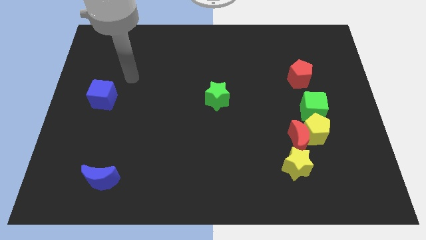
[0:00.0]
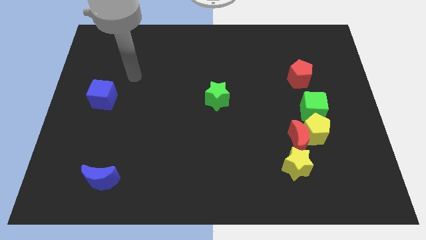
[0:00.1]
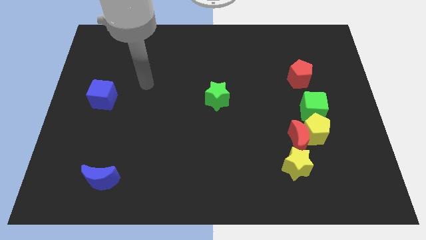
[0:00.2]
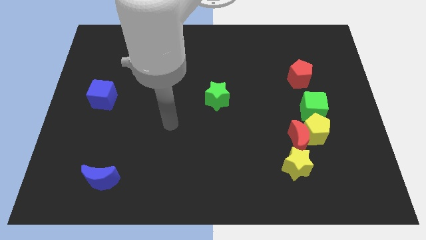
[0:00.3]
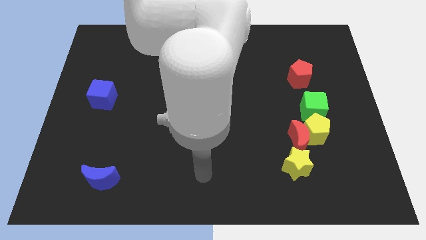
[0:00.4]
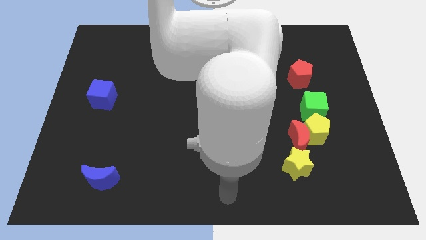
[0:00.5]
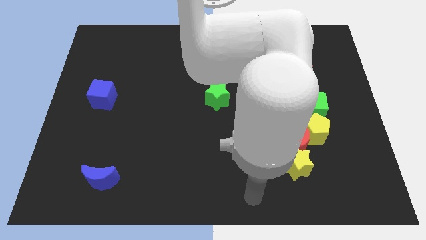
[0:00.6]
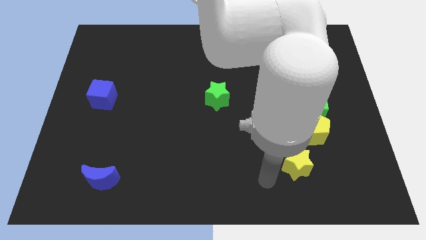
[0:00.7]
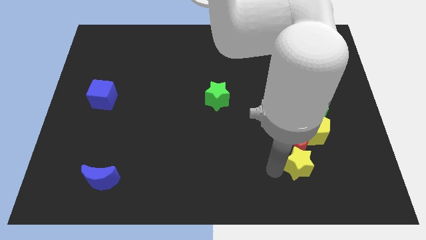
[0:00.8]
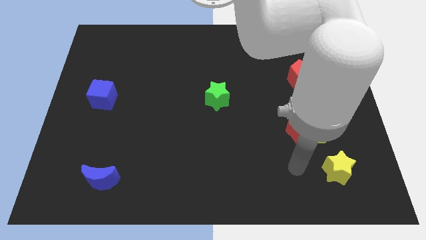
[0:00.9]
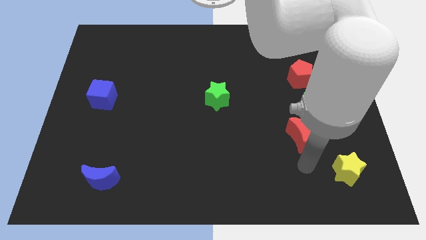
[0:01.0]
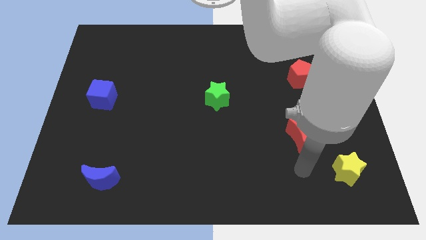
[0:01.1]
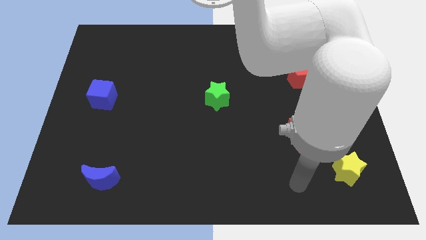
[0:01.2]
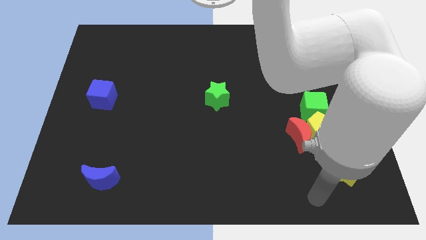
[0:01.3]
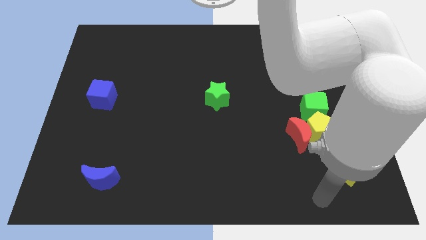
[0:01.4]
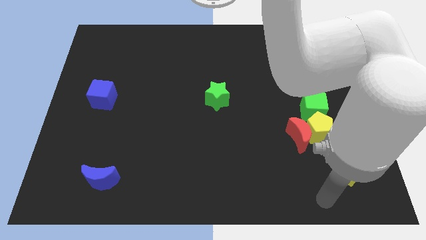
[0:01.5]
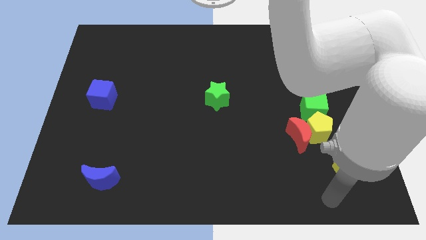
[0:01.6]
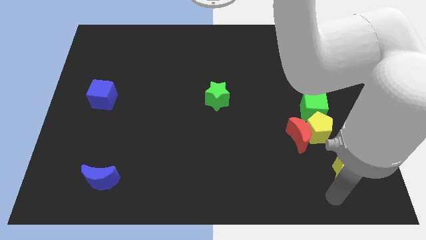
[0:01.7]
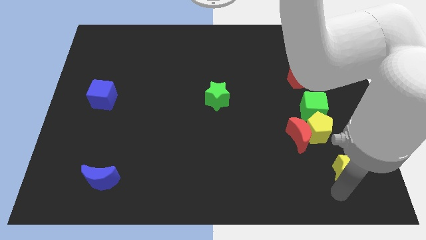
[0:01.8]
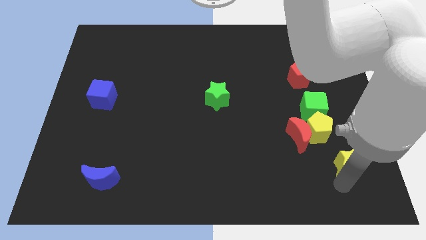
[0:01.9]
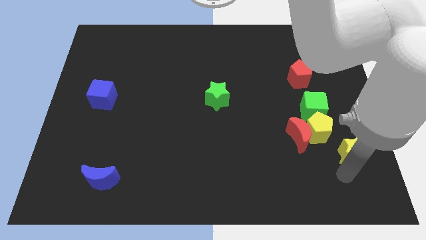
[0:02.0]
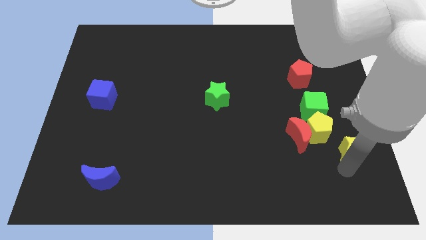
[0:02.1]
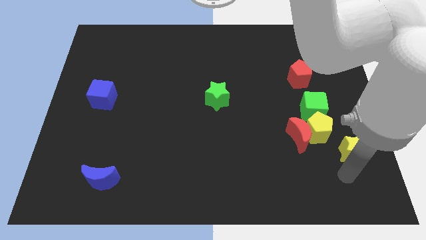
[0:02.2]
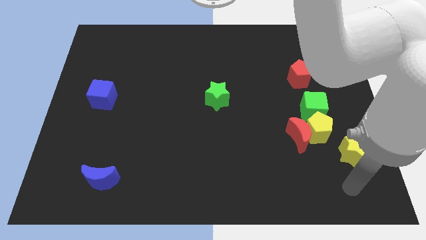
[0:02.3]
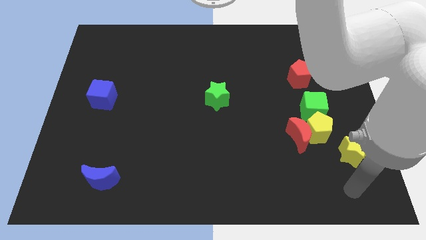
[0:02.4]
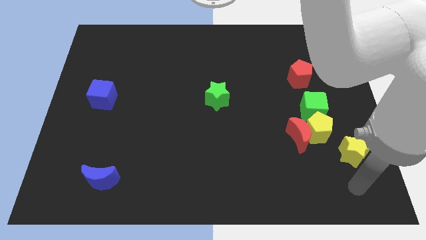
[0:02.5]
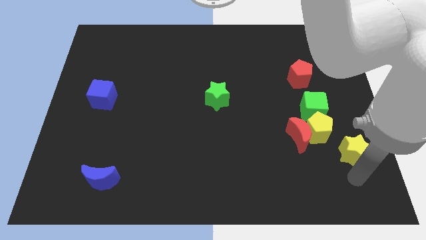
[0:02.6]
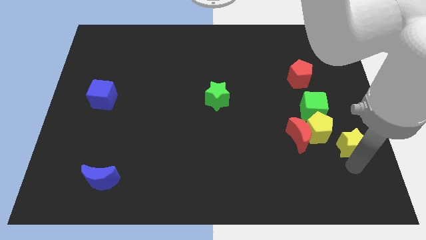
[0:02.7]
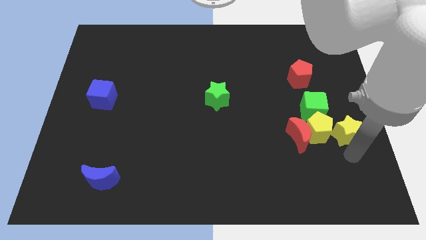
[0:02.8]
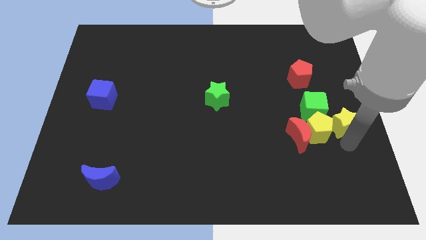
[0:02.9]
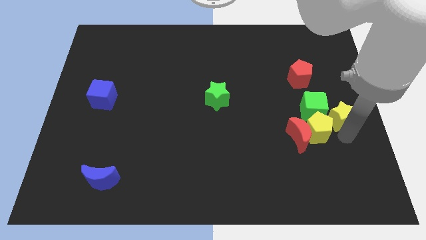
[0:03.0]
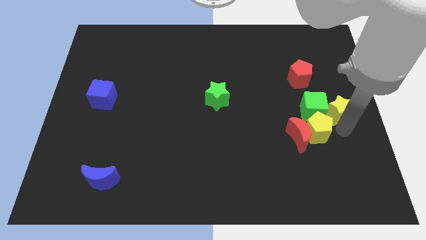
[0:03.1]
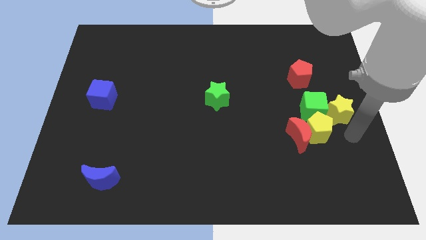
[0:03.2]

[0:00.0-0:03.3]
slide the yellow star next to the green cube

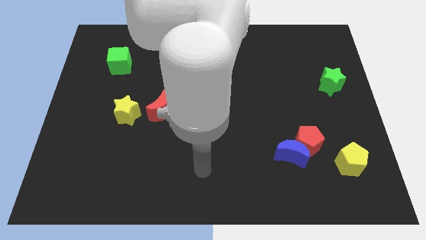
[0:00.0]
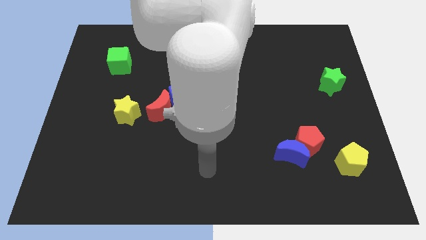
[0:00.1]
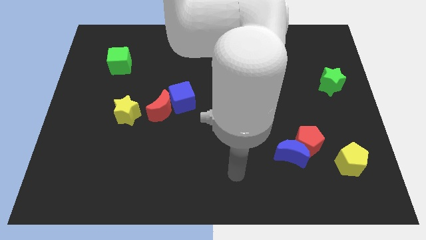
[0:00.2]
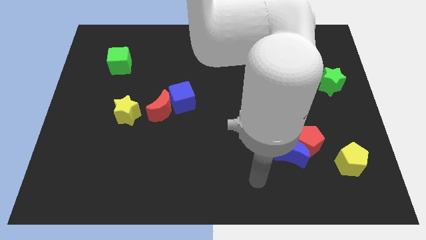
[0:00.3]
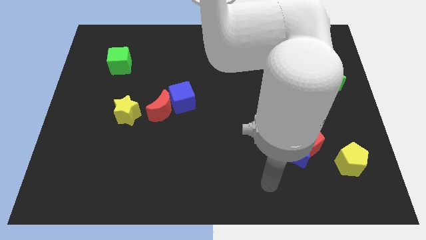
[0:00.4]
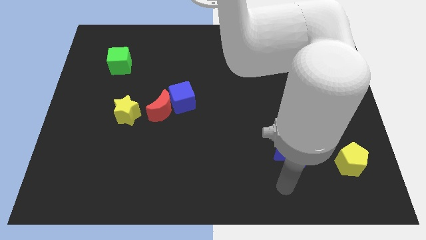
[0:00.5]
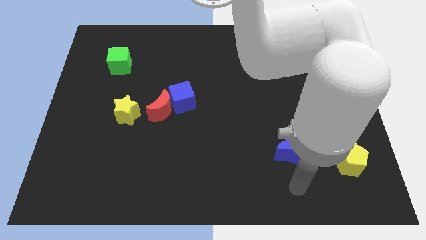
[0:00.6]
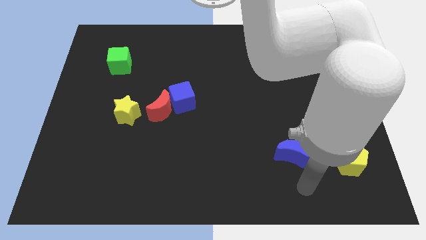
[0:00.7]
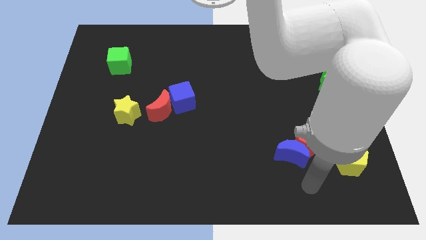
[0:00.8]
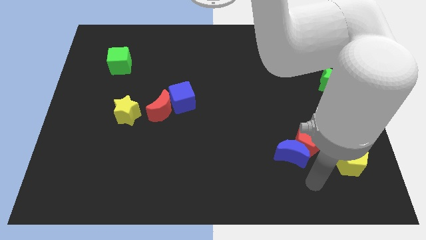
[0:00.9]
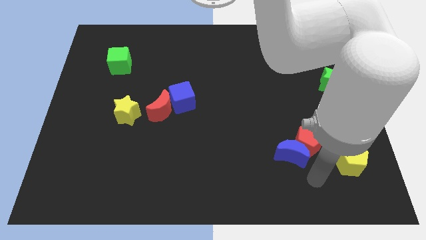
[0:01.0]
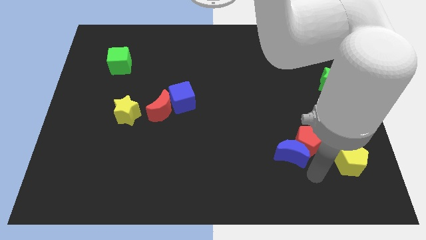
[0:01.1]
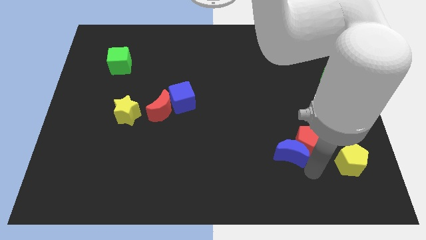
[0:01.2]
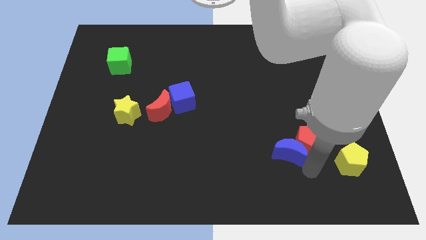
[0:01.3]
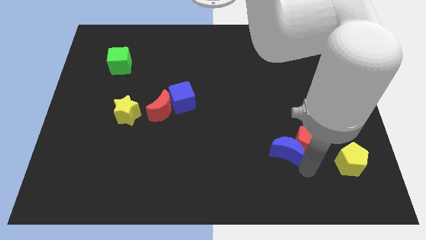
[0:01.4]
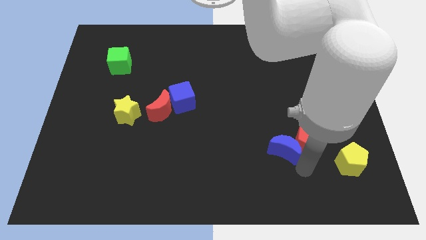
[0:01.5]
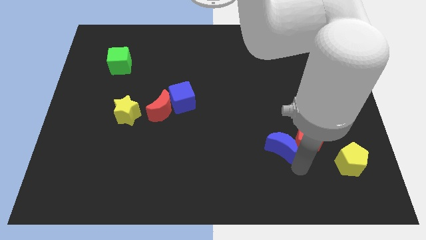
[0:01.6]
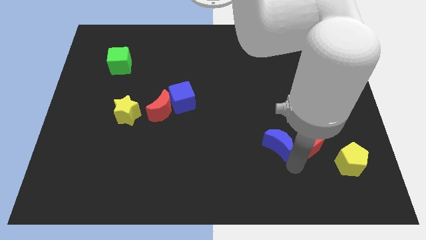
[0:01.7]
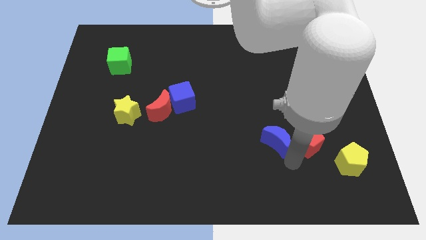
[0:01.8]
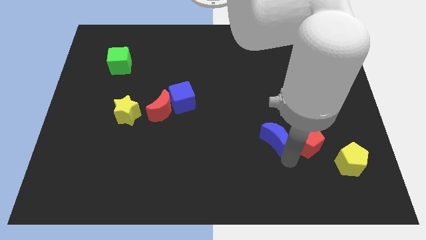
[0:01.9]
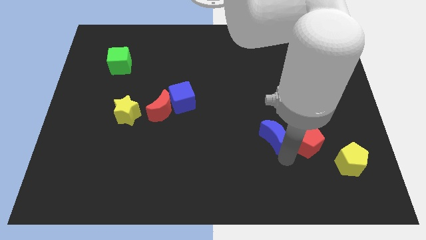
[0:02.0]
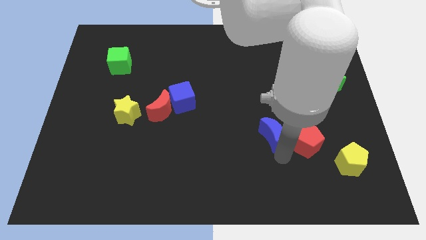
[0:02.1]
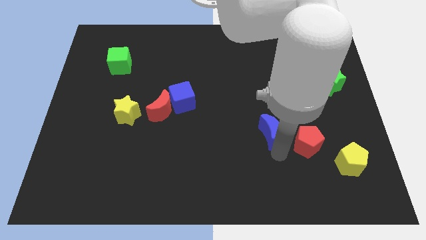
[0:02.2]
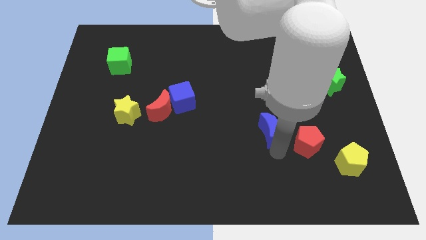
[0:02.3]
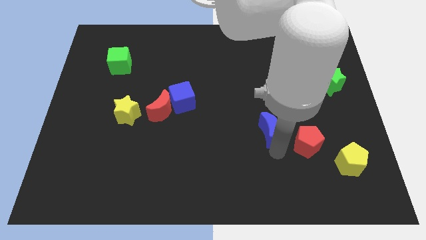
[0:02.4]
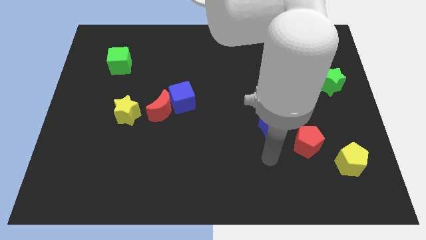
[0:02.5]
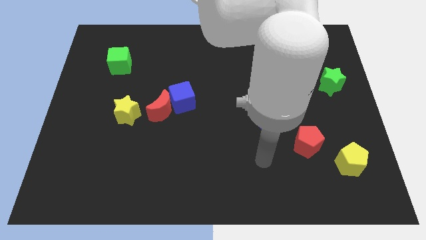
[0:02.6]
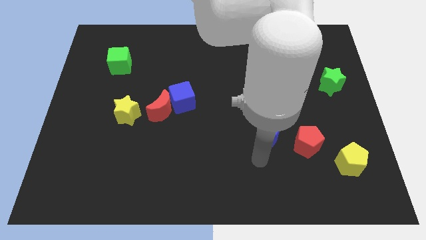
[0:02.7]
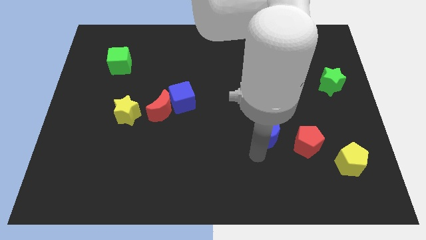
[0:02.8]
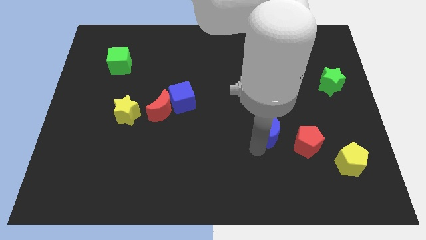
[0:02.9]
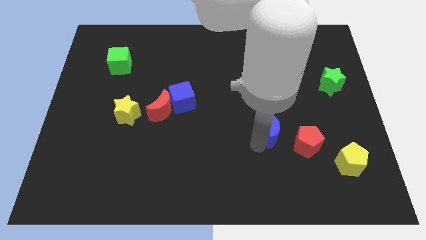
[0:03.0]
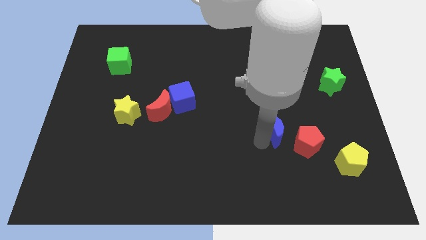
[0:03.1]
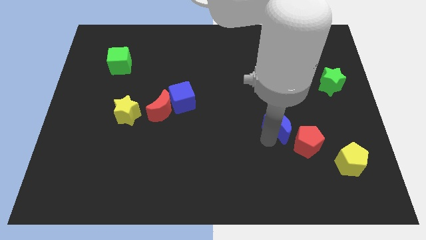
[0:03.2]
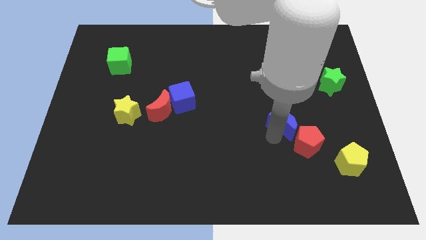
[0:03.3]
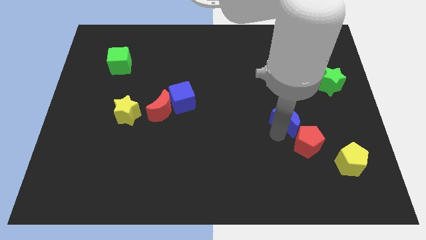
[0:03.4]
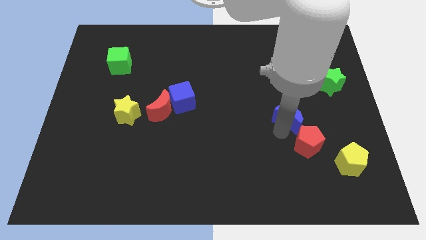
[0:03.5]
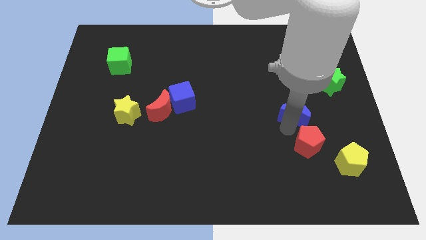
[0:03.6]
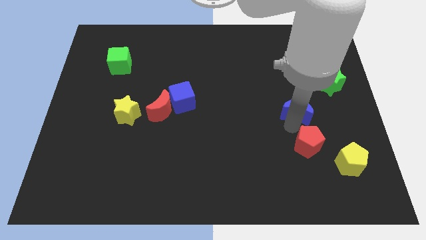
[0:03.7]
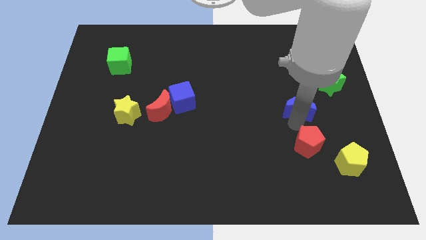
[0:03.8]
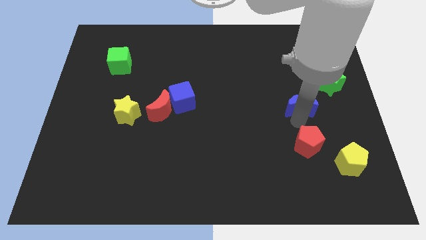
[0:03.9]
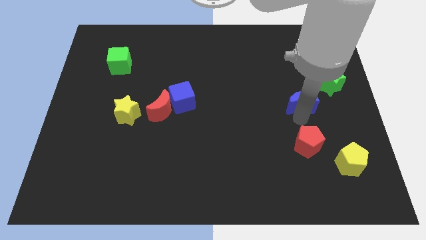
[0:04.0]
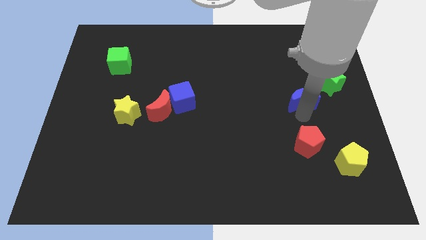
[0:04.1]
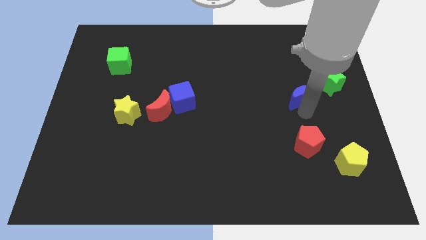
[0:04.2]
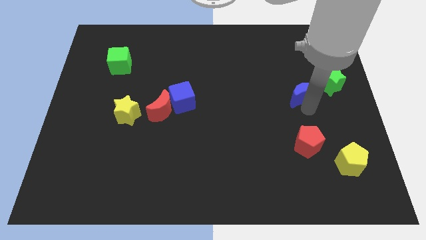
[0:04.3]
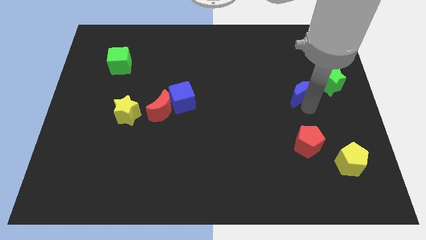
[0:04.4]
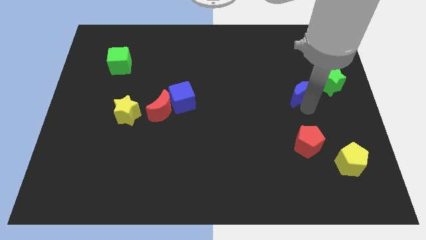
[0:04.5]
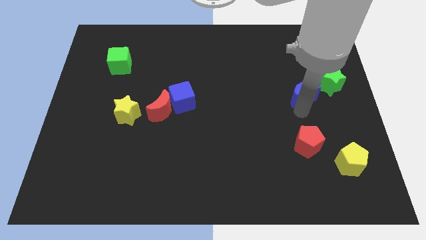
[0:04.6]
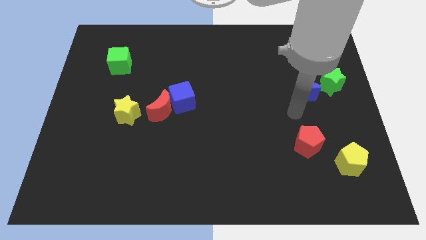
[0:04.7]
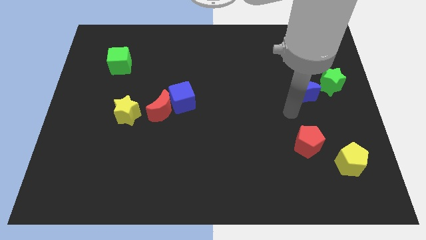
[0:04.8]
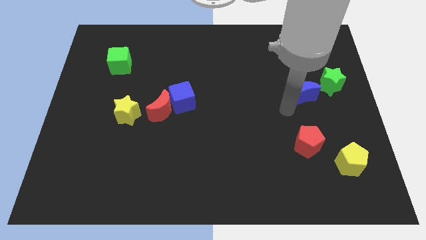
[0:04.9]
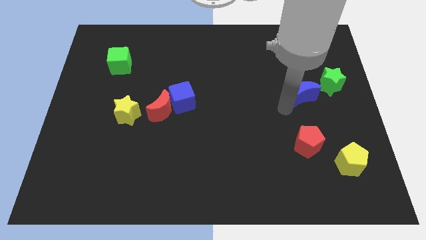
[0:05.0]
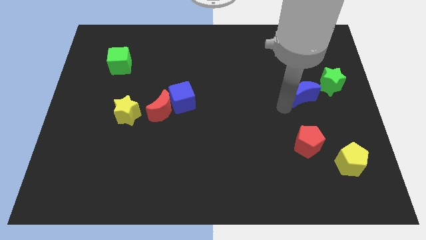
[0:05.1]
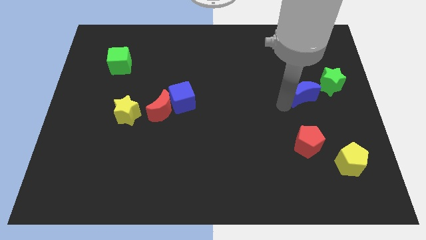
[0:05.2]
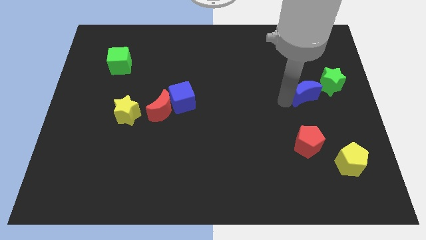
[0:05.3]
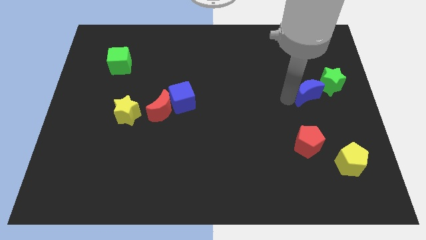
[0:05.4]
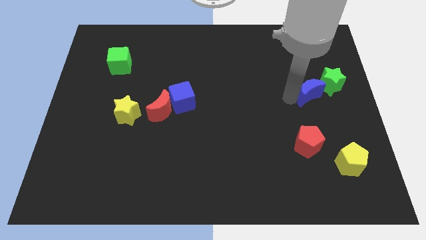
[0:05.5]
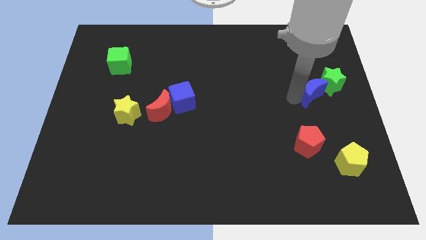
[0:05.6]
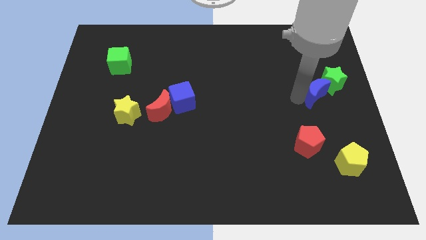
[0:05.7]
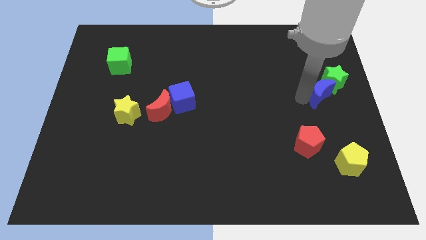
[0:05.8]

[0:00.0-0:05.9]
push the blue moon to the green star
